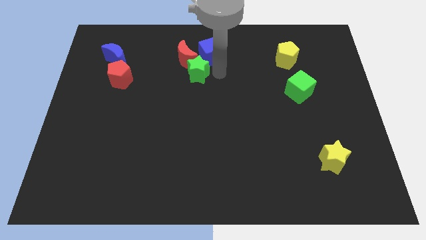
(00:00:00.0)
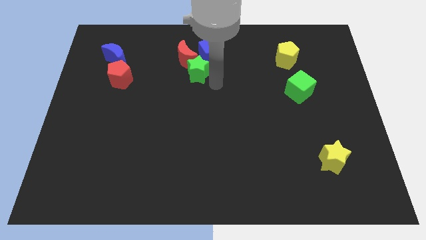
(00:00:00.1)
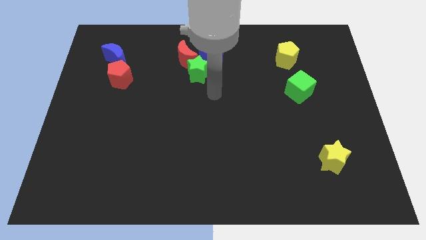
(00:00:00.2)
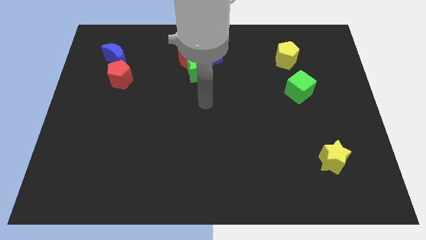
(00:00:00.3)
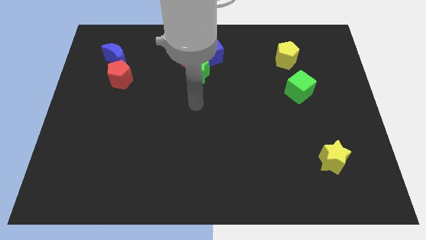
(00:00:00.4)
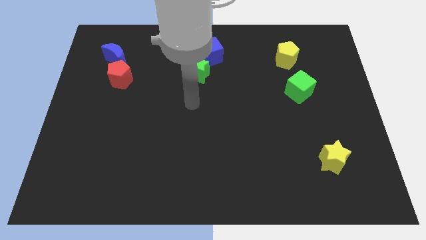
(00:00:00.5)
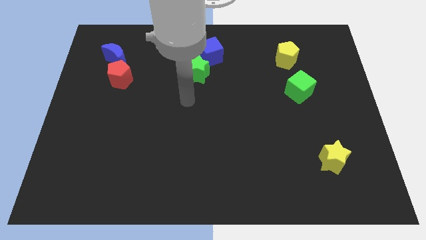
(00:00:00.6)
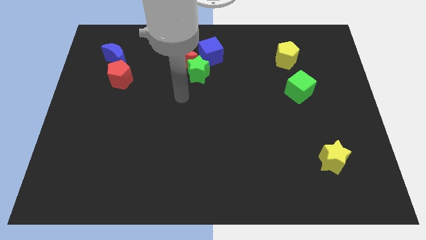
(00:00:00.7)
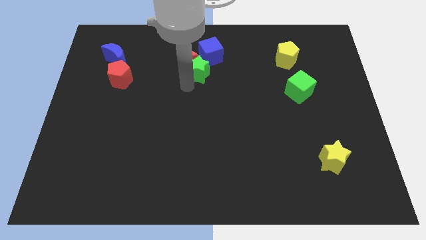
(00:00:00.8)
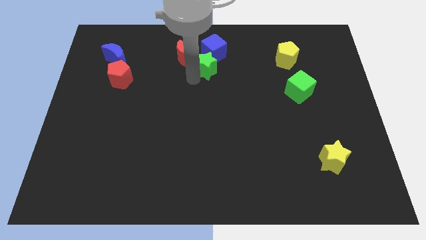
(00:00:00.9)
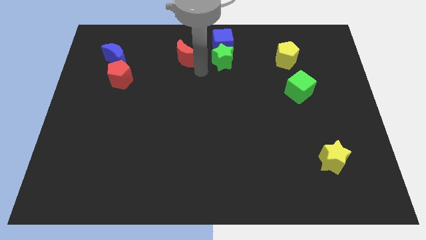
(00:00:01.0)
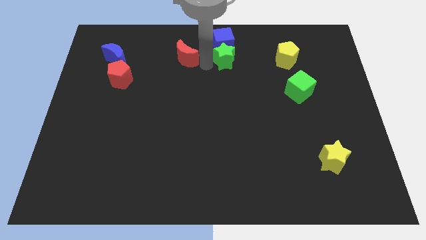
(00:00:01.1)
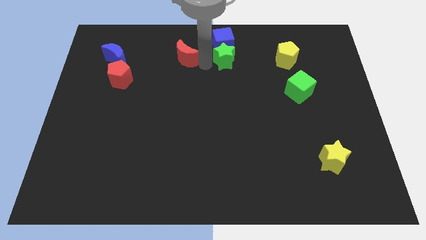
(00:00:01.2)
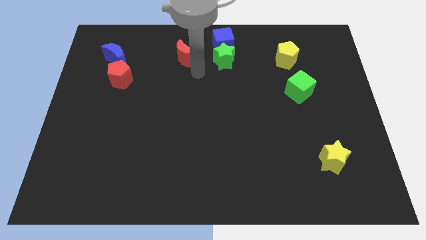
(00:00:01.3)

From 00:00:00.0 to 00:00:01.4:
place the green star below the blue cube

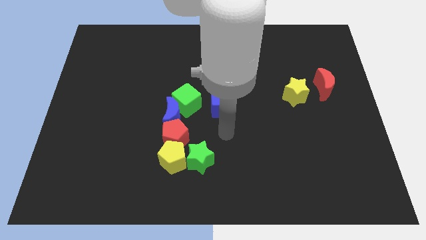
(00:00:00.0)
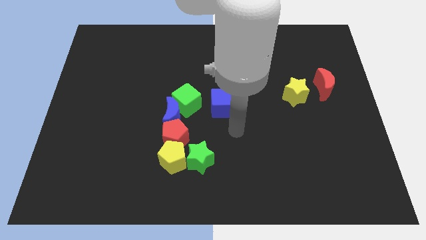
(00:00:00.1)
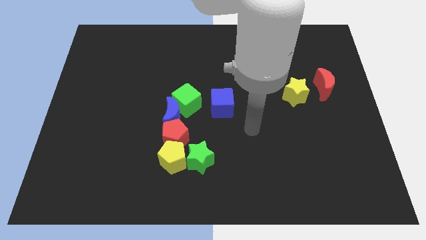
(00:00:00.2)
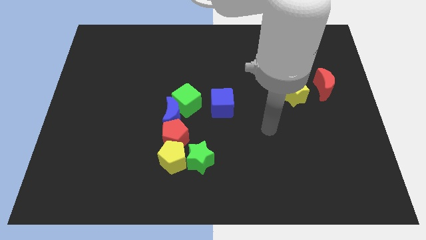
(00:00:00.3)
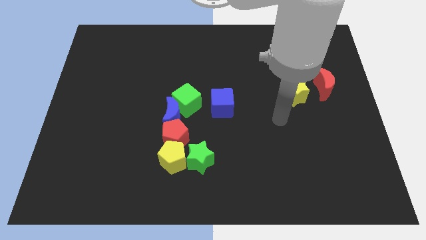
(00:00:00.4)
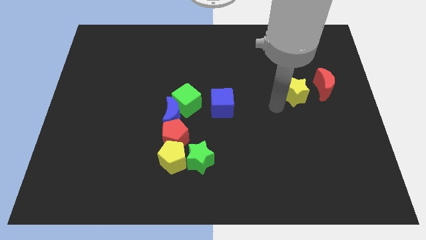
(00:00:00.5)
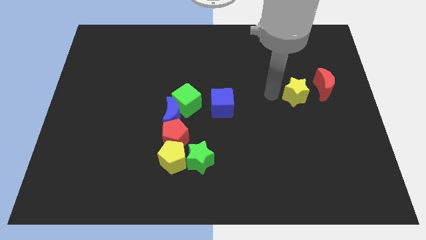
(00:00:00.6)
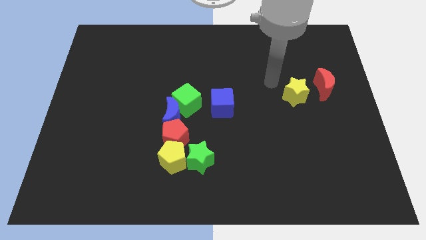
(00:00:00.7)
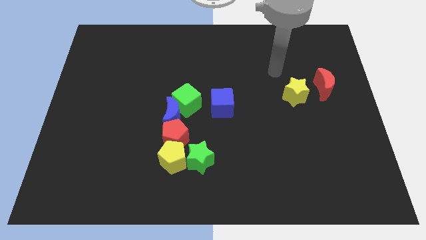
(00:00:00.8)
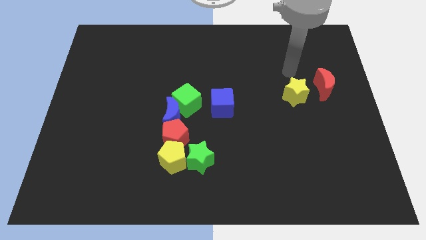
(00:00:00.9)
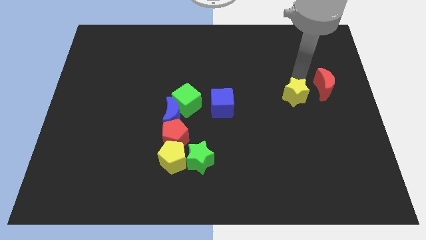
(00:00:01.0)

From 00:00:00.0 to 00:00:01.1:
place arm on the top of yellow star

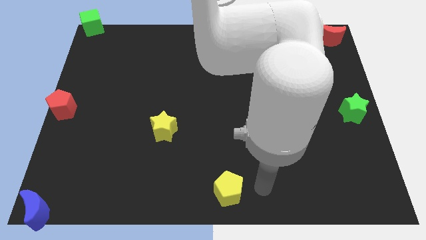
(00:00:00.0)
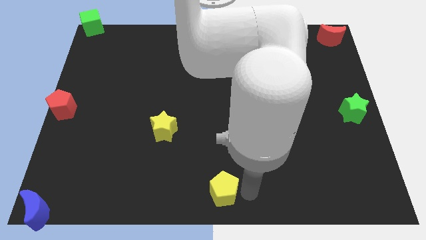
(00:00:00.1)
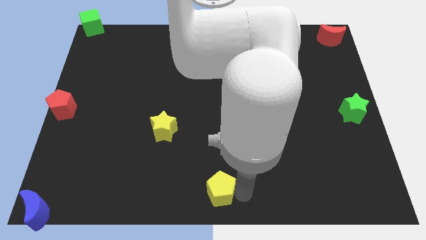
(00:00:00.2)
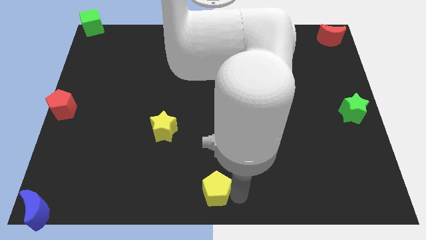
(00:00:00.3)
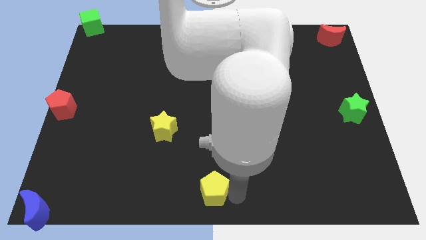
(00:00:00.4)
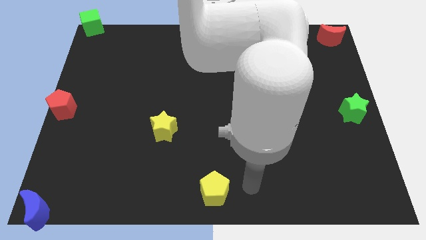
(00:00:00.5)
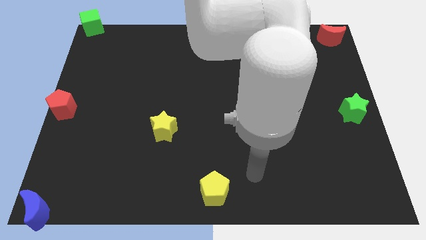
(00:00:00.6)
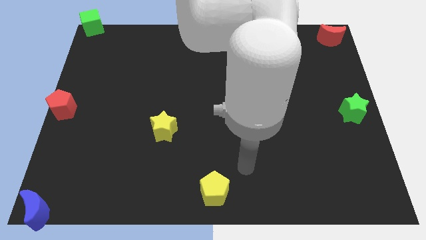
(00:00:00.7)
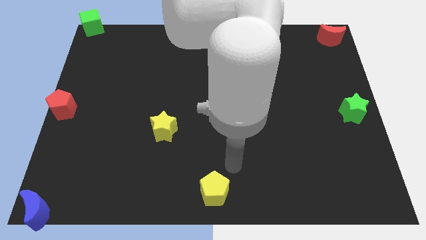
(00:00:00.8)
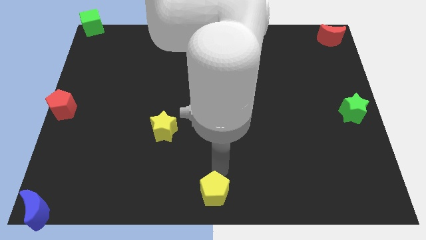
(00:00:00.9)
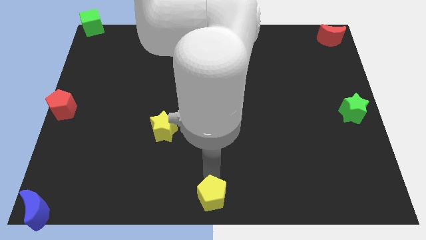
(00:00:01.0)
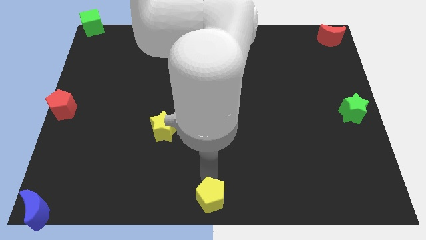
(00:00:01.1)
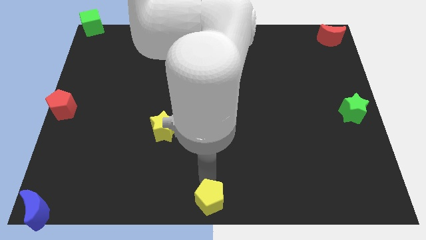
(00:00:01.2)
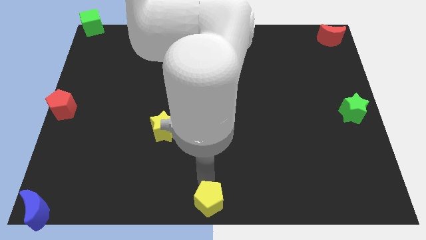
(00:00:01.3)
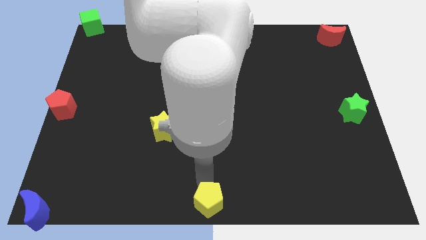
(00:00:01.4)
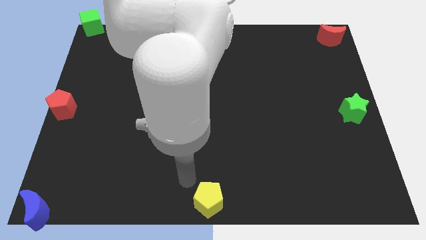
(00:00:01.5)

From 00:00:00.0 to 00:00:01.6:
place the yellow pentagon at the bottom center of the table

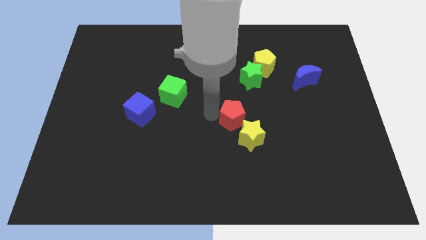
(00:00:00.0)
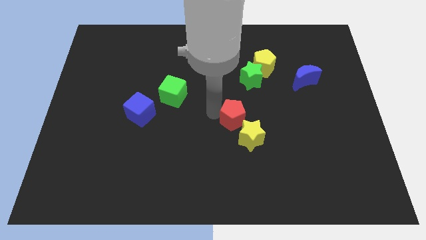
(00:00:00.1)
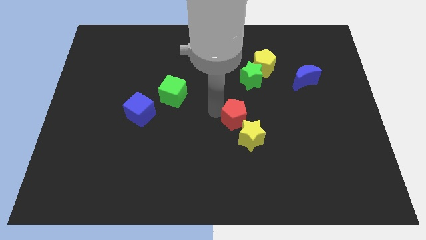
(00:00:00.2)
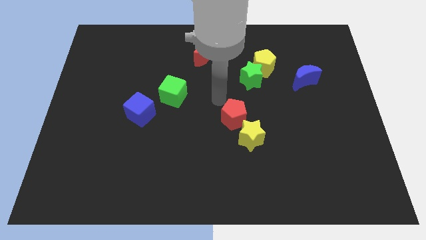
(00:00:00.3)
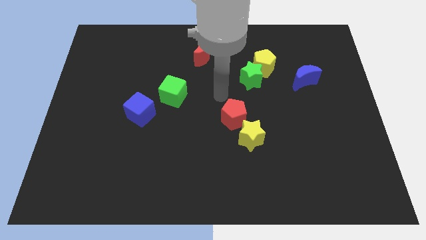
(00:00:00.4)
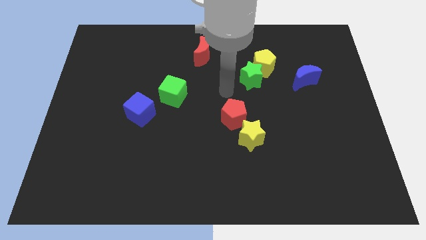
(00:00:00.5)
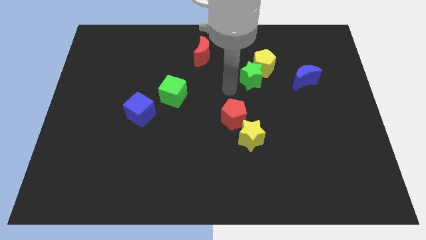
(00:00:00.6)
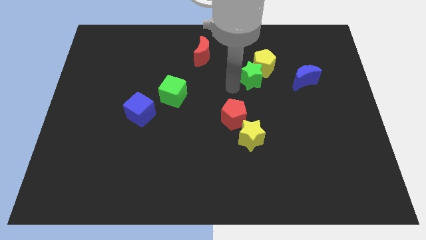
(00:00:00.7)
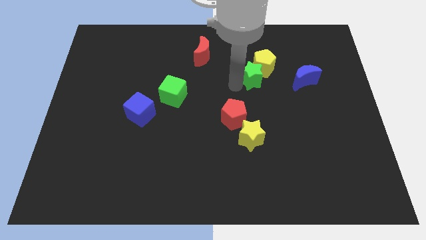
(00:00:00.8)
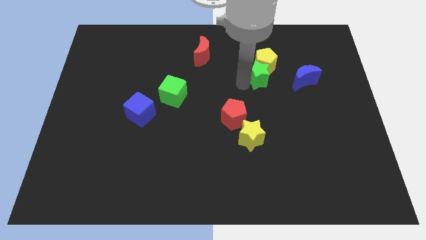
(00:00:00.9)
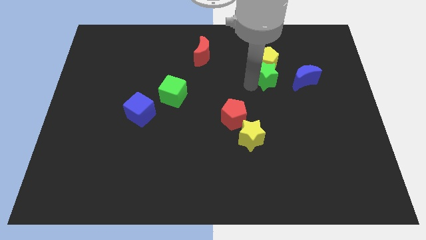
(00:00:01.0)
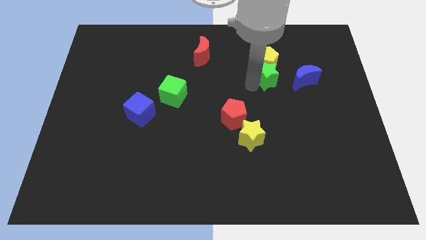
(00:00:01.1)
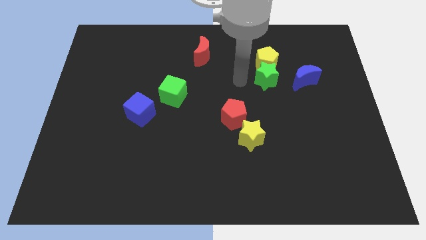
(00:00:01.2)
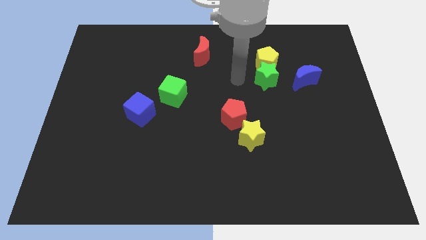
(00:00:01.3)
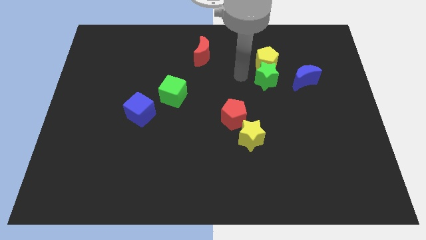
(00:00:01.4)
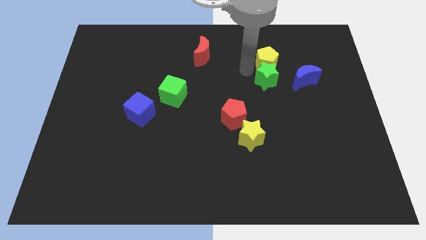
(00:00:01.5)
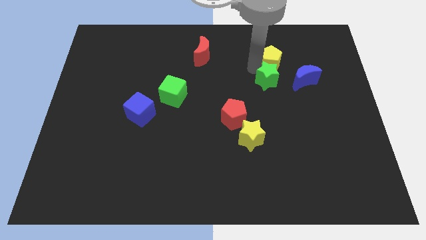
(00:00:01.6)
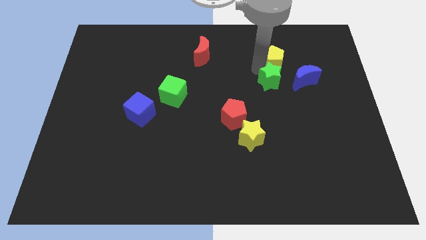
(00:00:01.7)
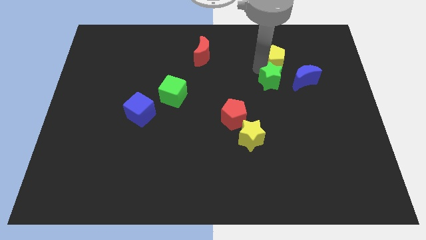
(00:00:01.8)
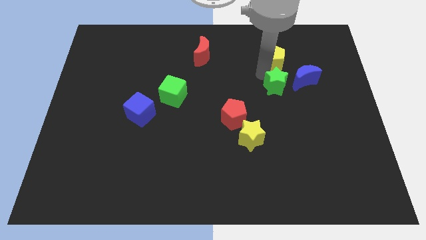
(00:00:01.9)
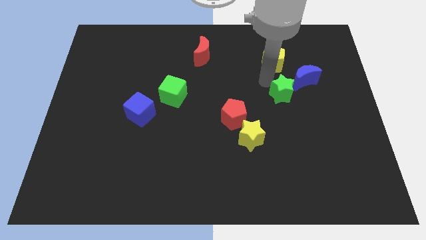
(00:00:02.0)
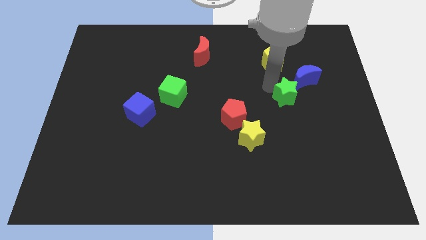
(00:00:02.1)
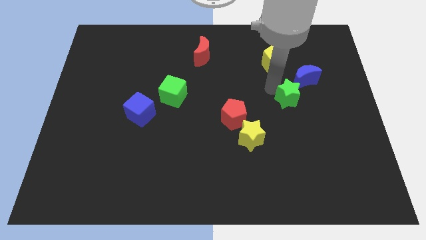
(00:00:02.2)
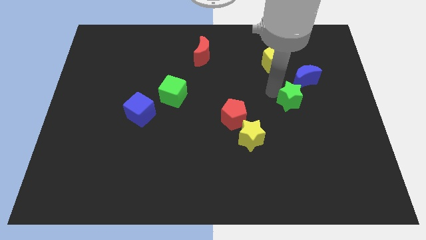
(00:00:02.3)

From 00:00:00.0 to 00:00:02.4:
separate the yellow pentagon and green star

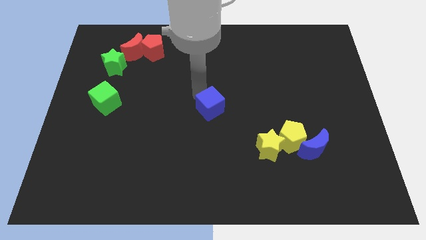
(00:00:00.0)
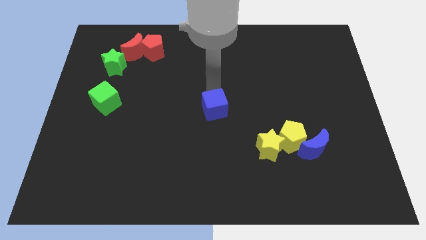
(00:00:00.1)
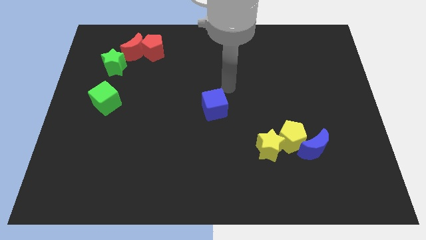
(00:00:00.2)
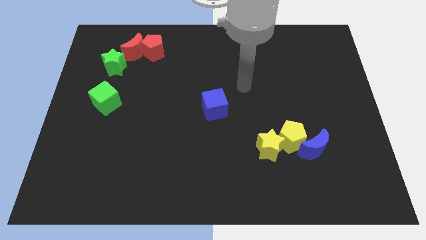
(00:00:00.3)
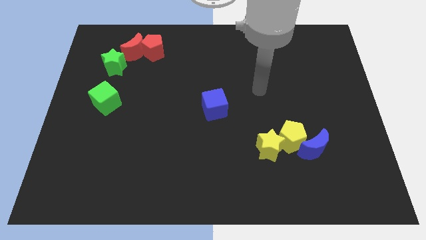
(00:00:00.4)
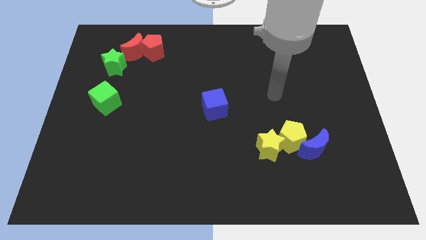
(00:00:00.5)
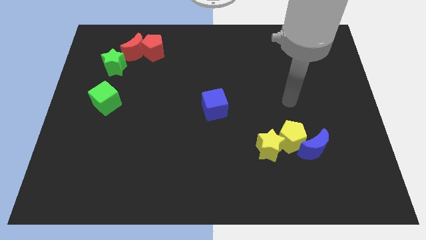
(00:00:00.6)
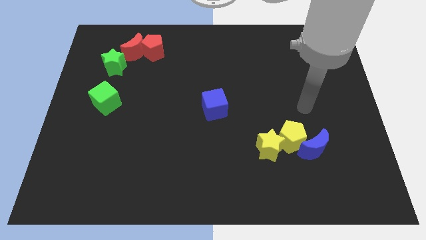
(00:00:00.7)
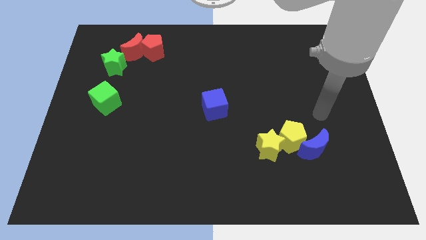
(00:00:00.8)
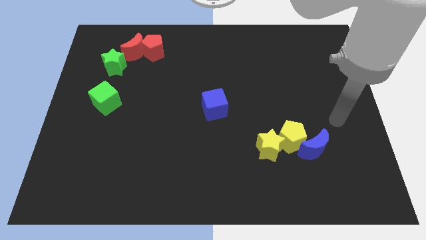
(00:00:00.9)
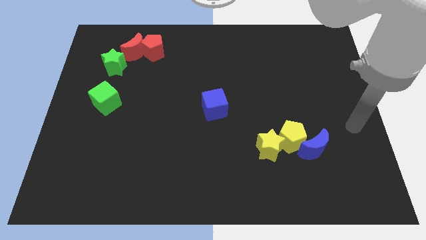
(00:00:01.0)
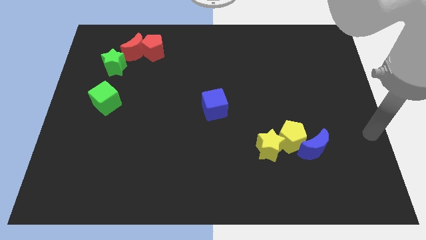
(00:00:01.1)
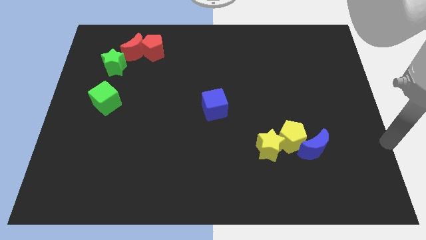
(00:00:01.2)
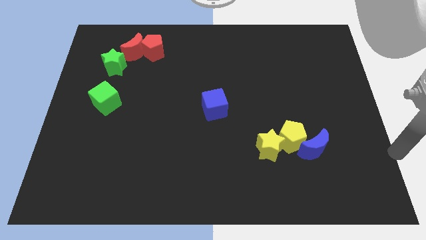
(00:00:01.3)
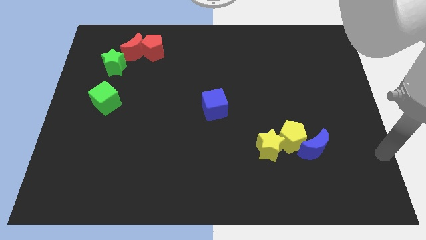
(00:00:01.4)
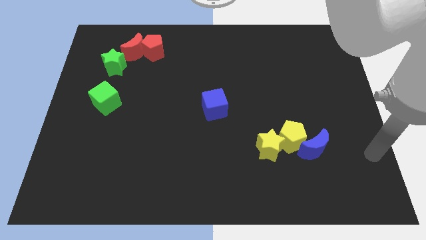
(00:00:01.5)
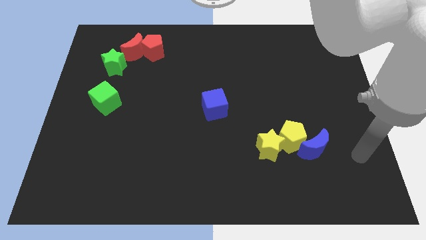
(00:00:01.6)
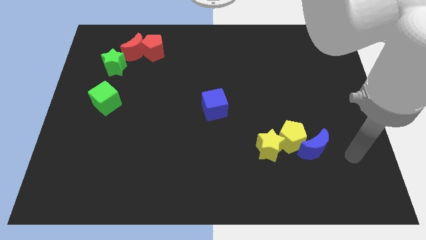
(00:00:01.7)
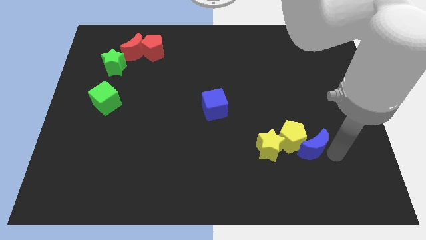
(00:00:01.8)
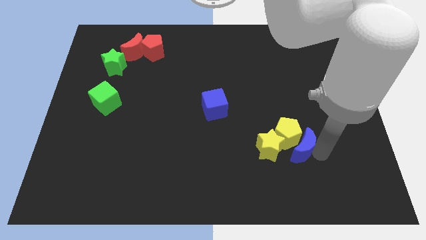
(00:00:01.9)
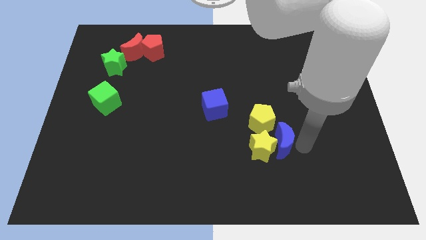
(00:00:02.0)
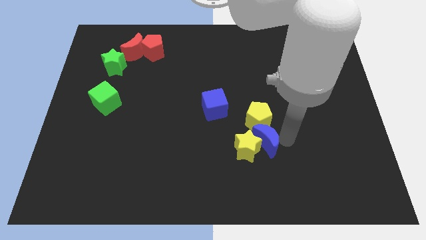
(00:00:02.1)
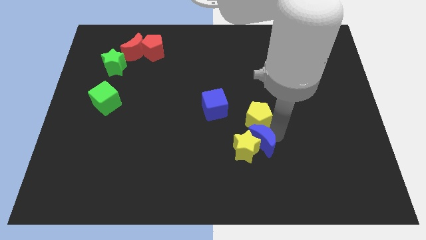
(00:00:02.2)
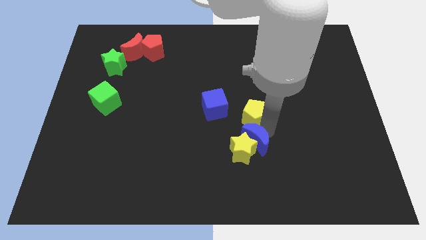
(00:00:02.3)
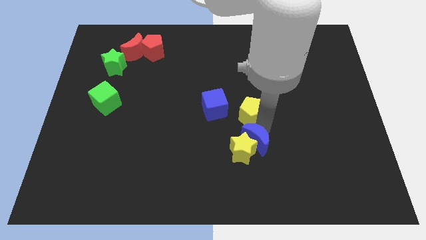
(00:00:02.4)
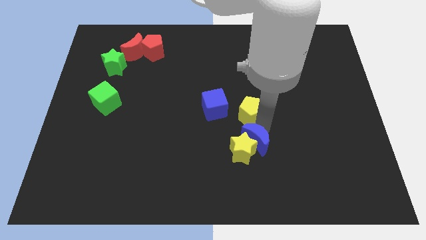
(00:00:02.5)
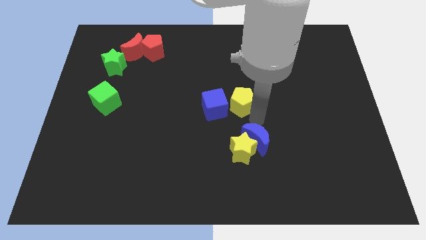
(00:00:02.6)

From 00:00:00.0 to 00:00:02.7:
move the yellow blocks and the blue moon towards the center of the board
